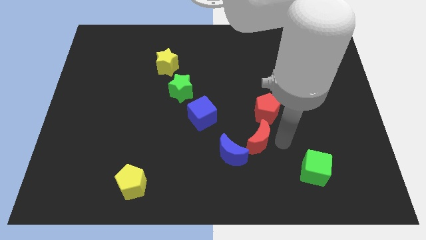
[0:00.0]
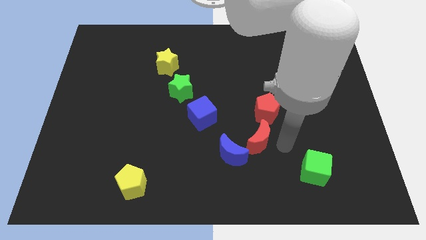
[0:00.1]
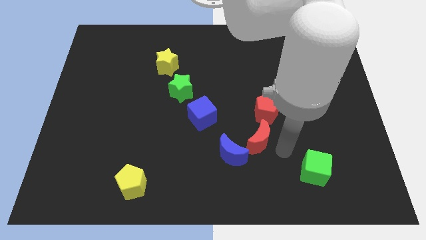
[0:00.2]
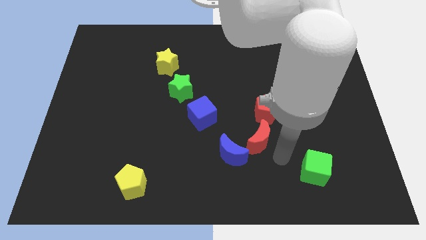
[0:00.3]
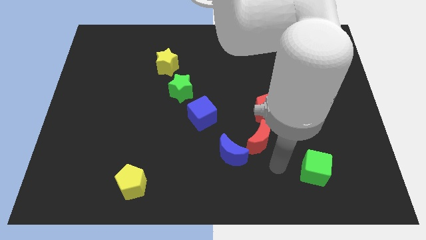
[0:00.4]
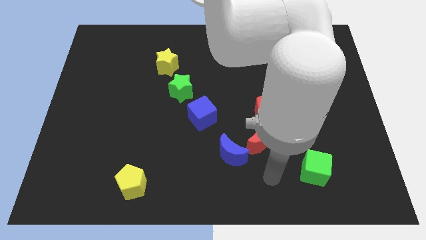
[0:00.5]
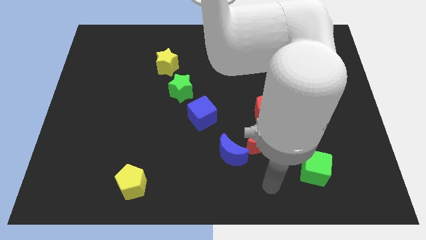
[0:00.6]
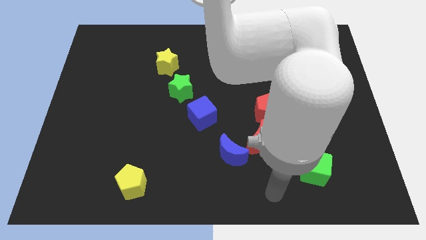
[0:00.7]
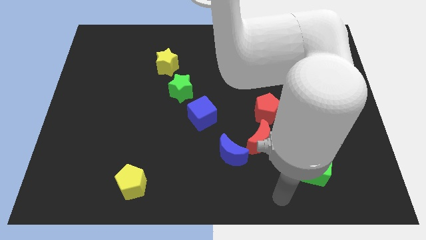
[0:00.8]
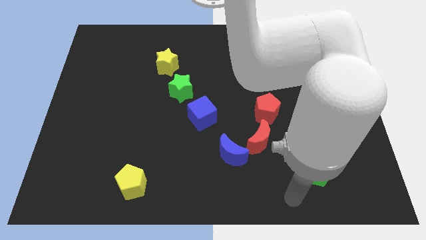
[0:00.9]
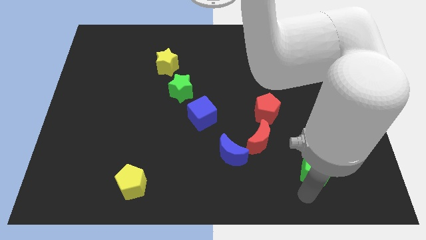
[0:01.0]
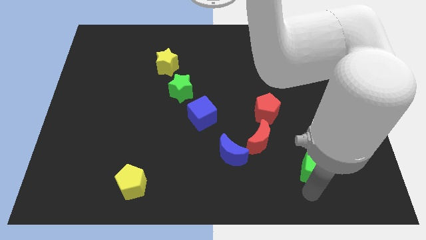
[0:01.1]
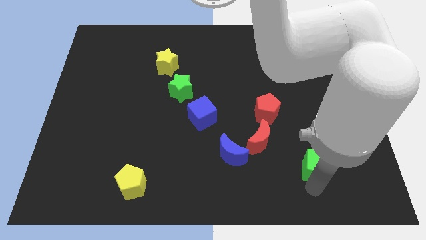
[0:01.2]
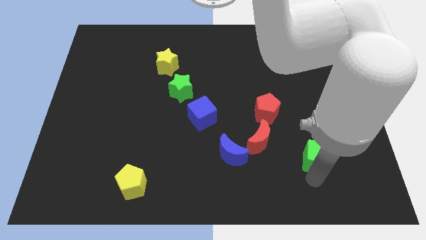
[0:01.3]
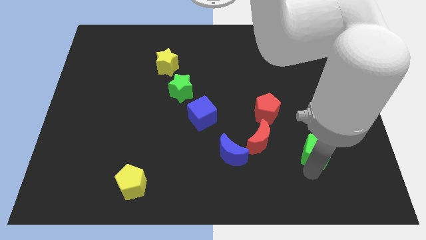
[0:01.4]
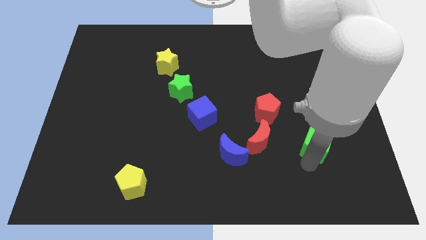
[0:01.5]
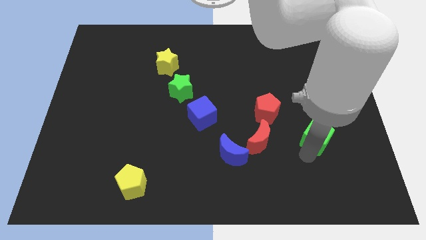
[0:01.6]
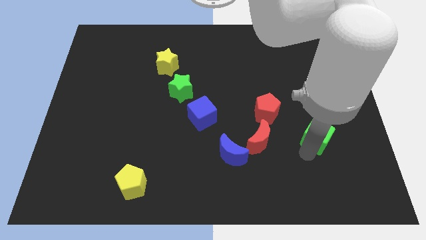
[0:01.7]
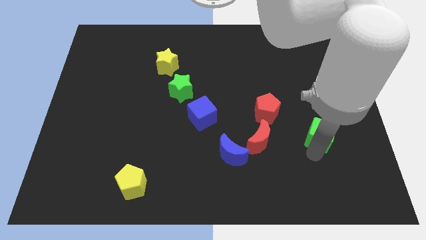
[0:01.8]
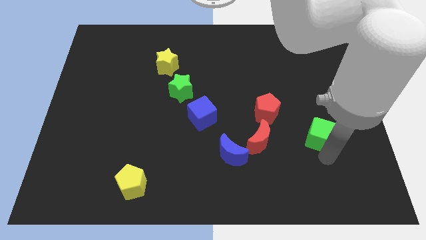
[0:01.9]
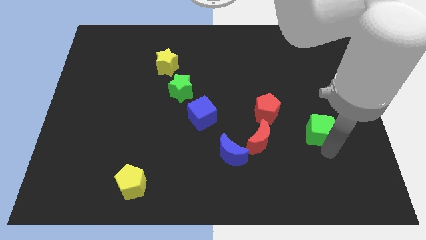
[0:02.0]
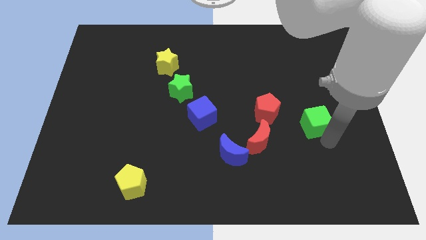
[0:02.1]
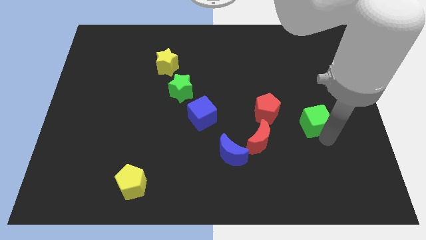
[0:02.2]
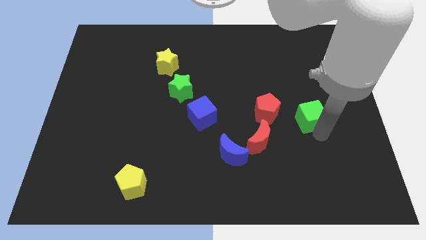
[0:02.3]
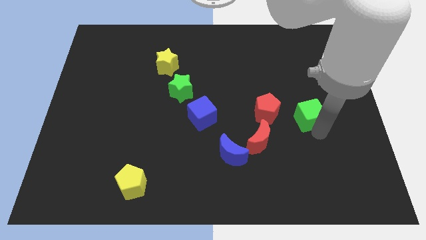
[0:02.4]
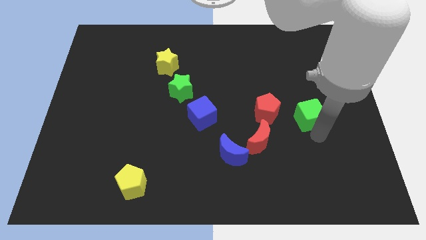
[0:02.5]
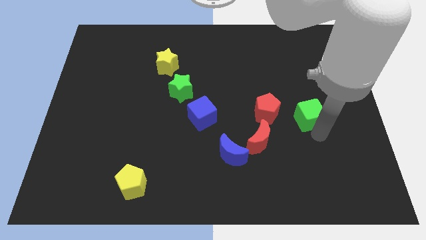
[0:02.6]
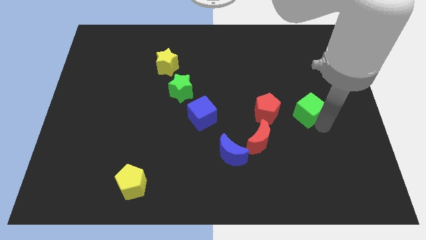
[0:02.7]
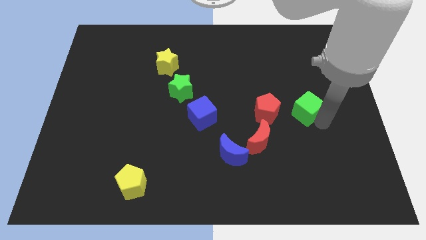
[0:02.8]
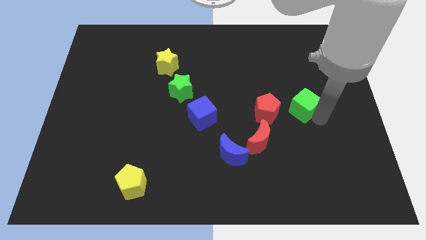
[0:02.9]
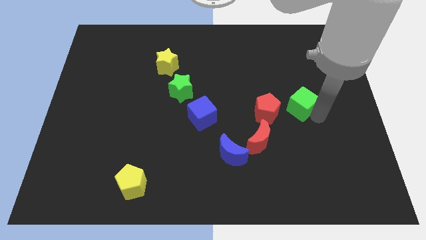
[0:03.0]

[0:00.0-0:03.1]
push the green cube to the right of the red pentagon

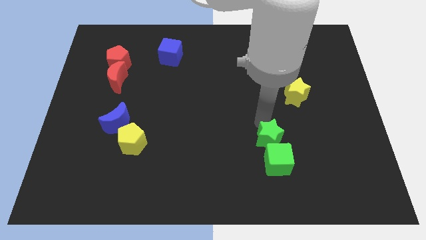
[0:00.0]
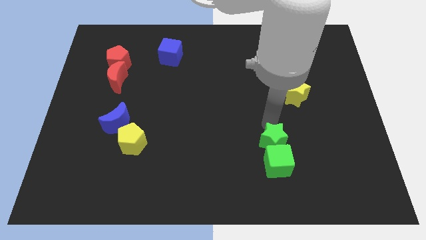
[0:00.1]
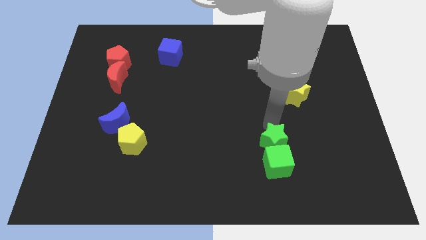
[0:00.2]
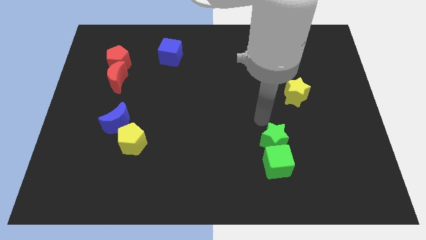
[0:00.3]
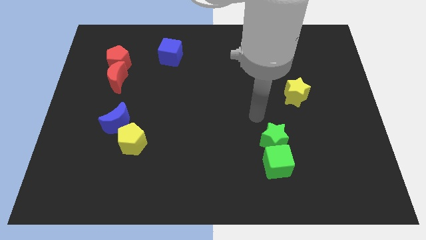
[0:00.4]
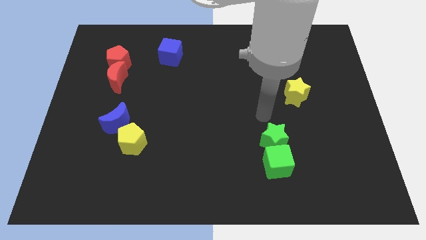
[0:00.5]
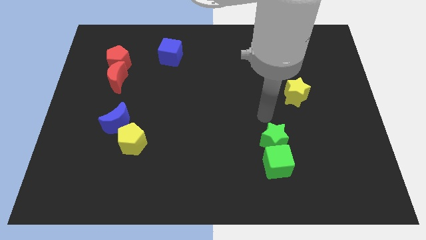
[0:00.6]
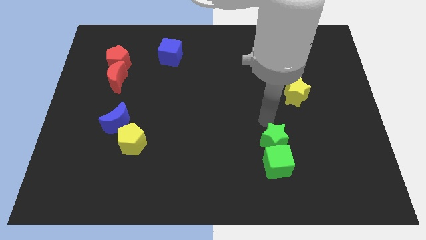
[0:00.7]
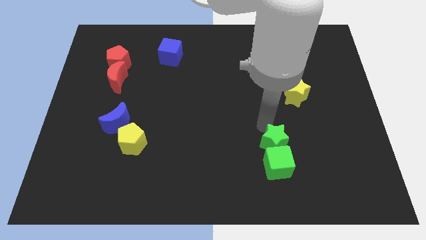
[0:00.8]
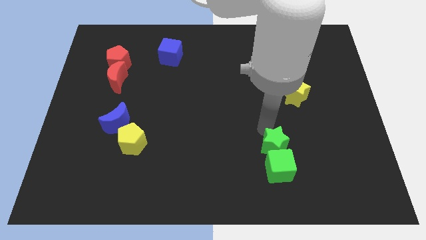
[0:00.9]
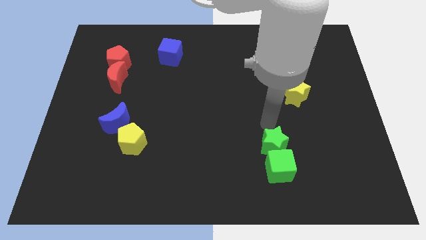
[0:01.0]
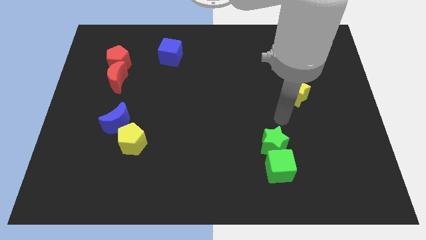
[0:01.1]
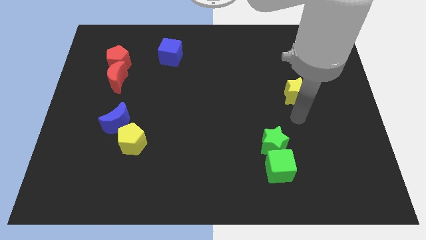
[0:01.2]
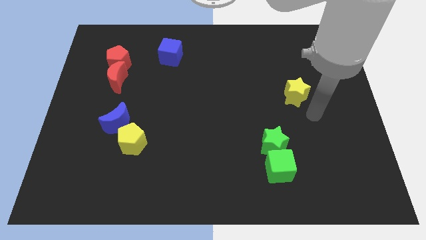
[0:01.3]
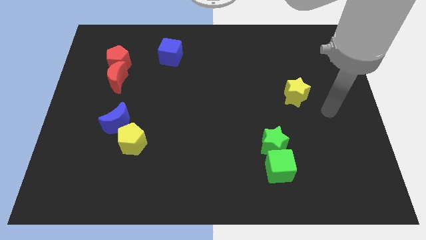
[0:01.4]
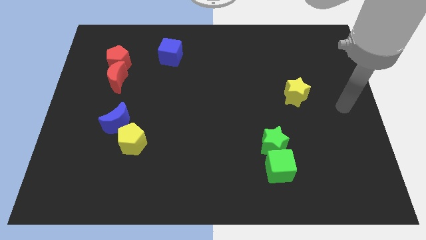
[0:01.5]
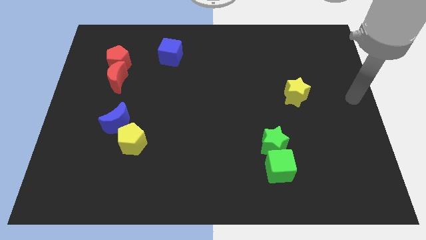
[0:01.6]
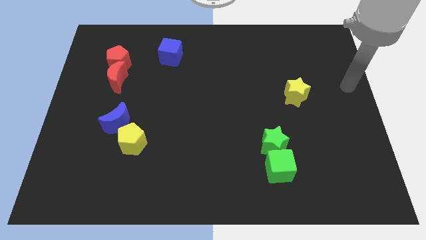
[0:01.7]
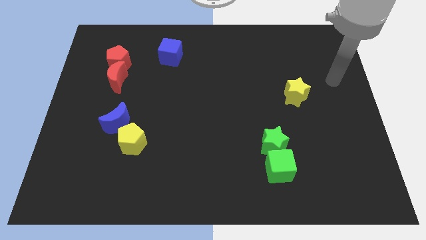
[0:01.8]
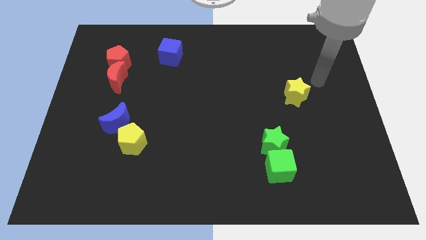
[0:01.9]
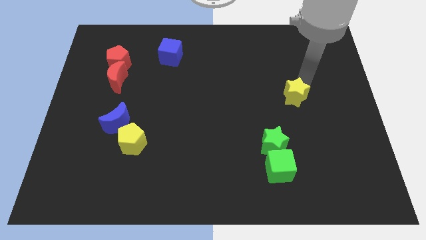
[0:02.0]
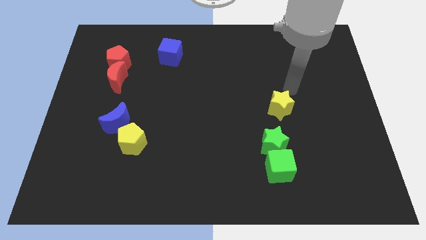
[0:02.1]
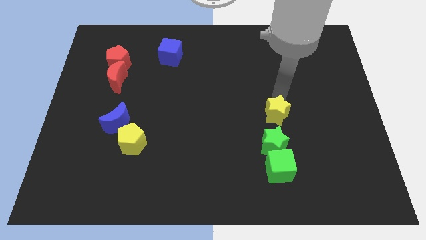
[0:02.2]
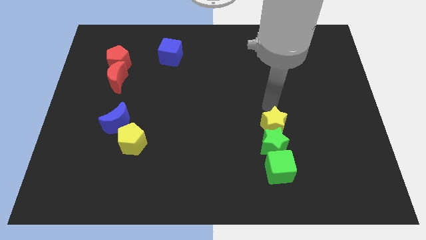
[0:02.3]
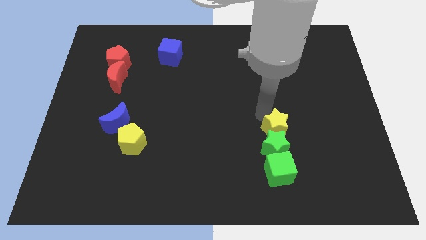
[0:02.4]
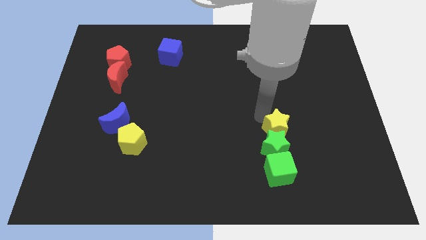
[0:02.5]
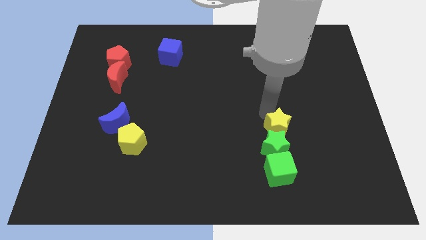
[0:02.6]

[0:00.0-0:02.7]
push the yellow star into the green star

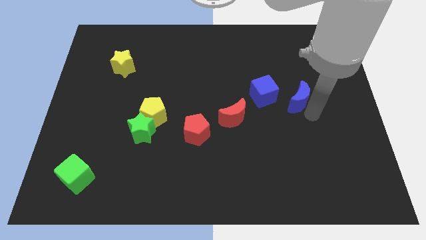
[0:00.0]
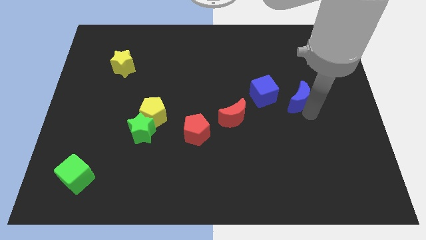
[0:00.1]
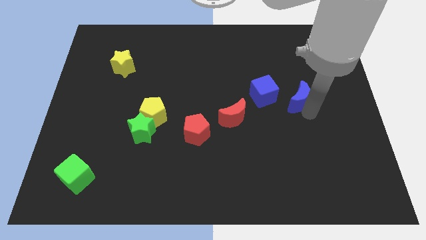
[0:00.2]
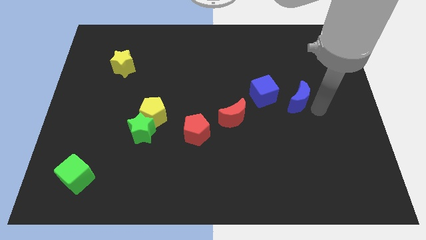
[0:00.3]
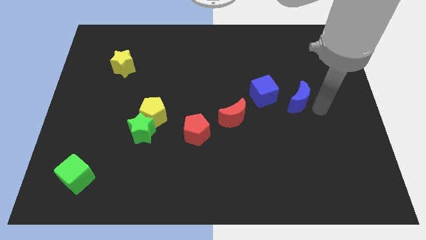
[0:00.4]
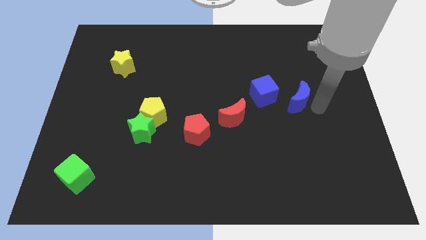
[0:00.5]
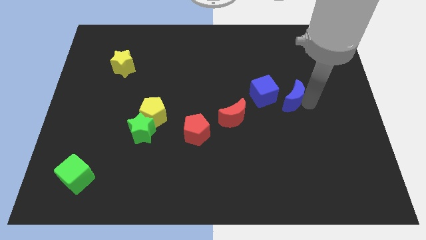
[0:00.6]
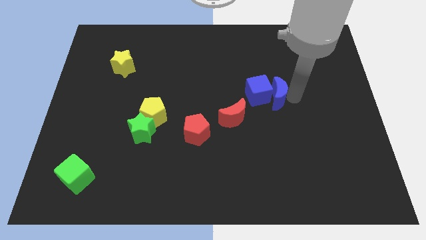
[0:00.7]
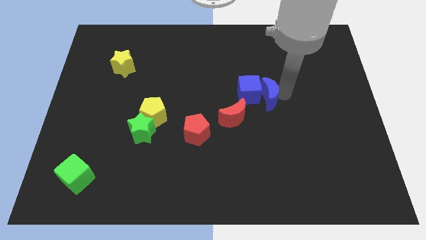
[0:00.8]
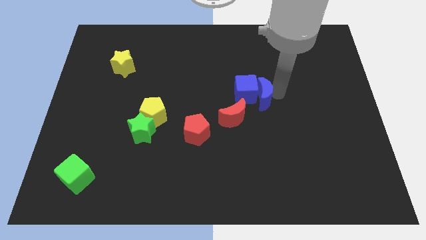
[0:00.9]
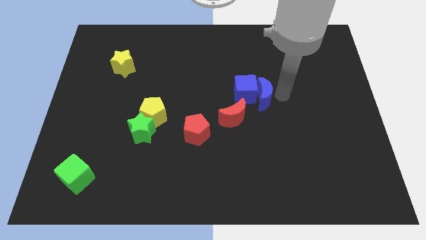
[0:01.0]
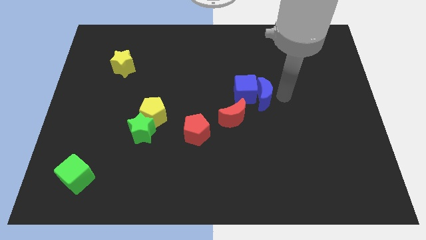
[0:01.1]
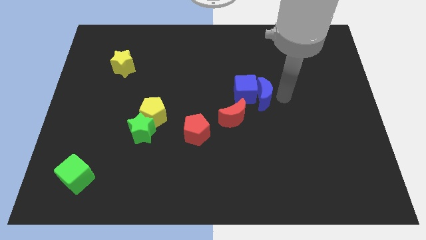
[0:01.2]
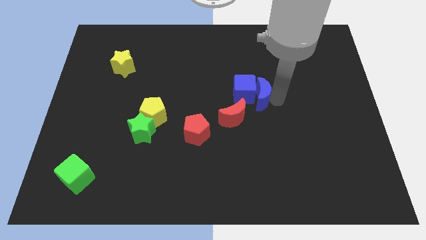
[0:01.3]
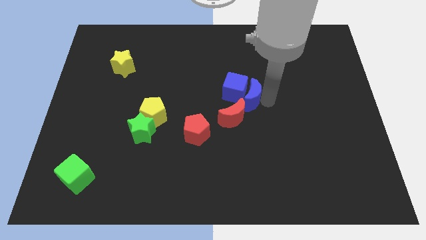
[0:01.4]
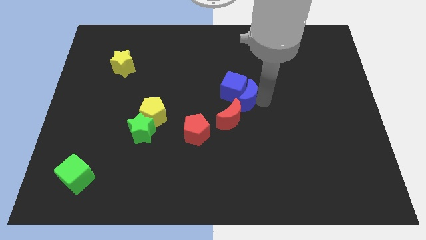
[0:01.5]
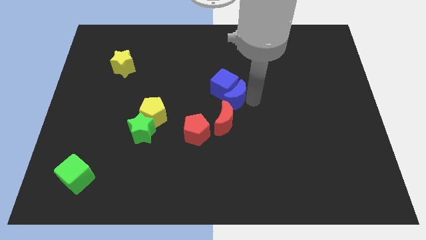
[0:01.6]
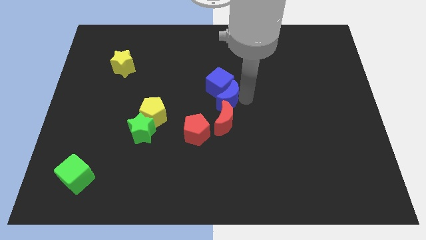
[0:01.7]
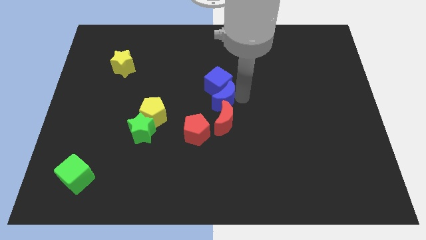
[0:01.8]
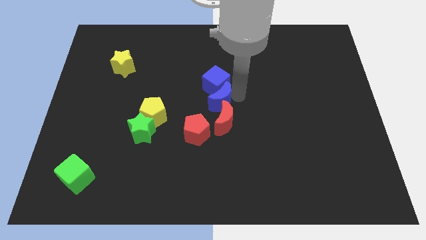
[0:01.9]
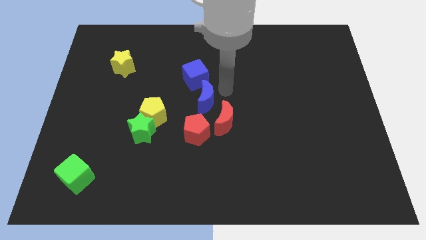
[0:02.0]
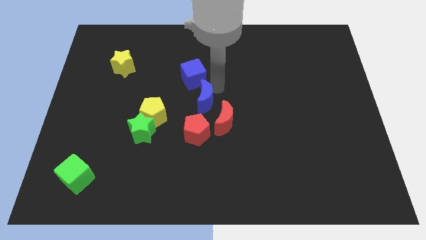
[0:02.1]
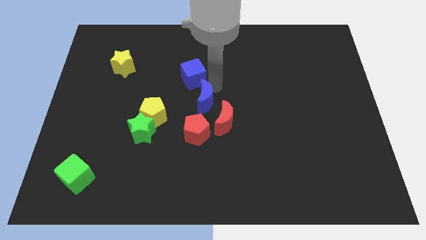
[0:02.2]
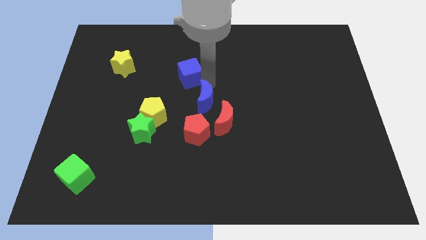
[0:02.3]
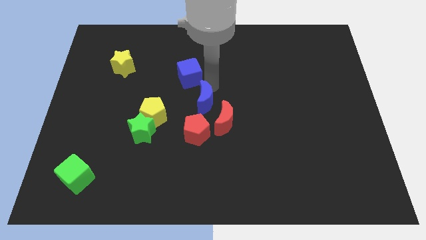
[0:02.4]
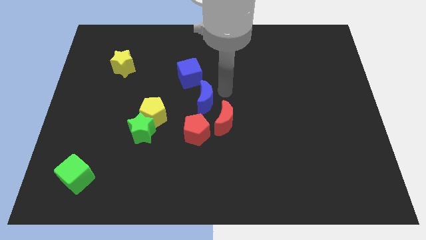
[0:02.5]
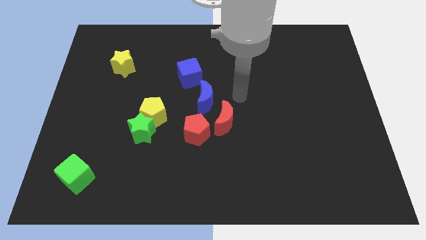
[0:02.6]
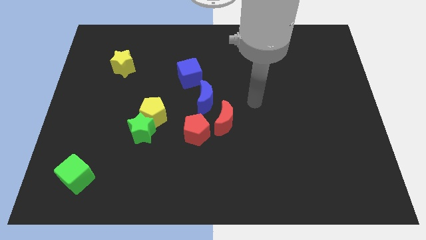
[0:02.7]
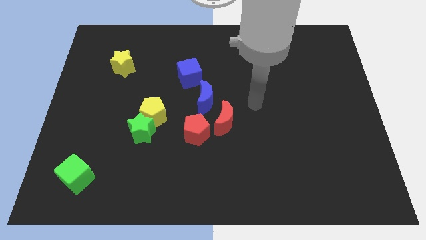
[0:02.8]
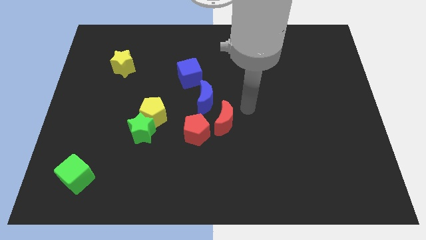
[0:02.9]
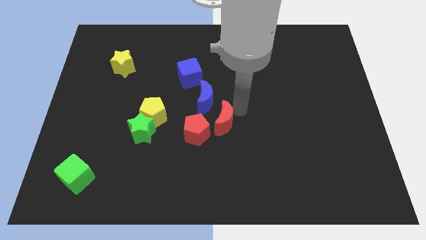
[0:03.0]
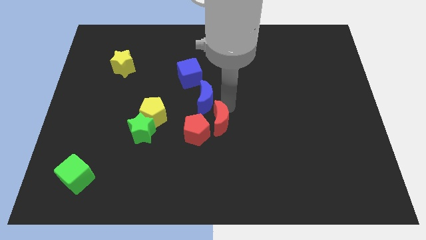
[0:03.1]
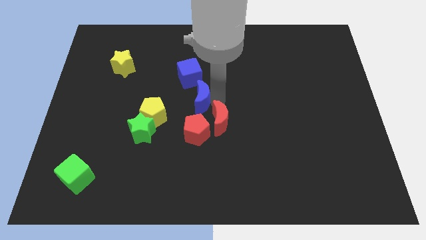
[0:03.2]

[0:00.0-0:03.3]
make a diagonal line out of blue blocks and the red moon
